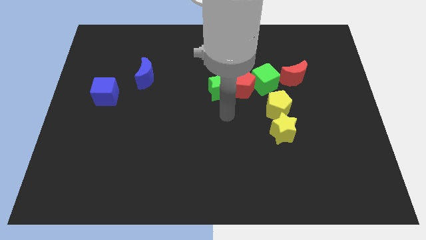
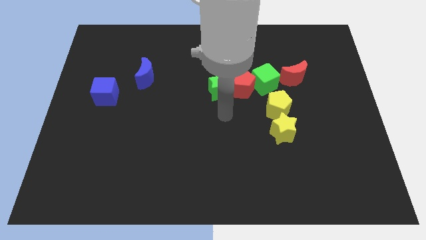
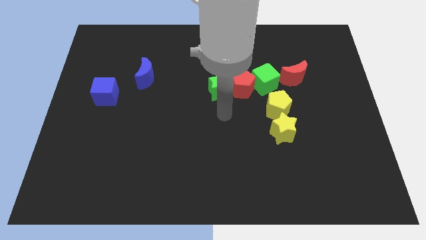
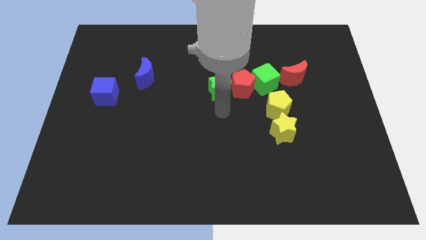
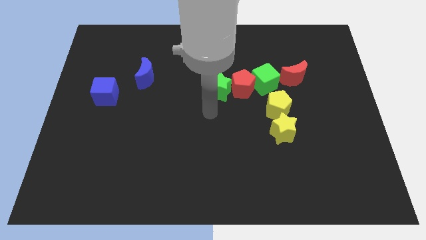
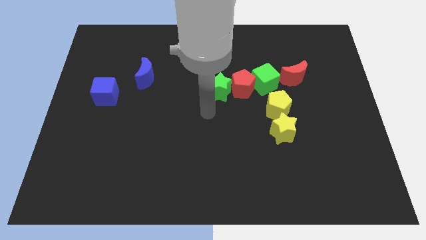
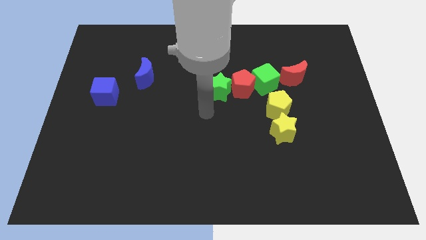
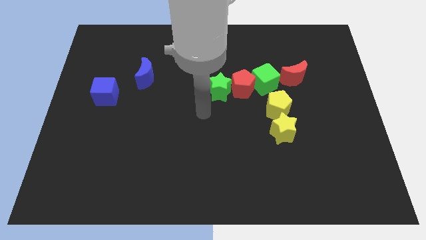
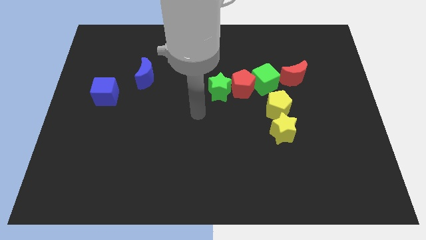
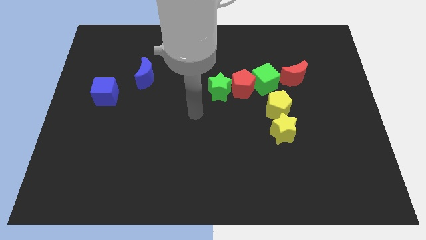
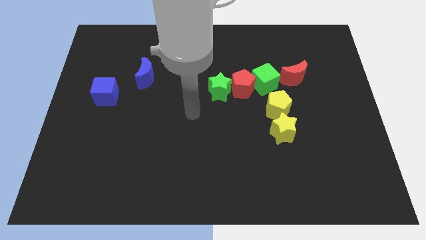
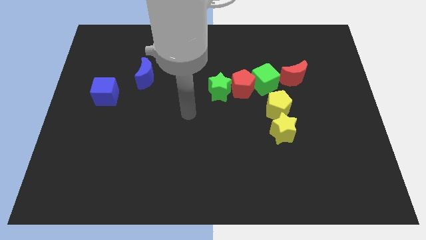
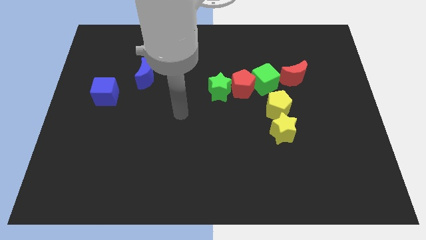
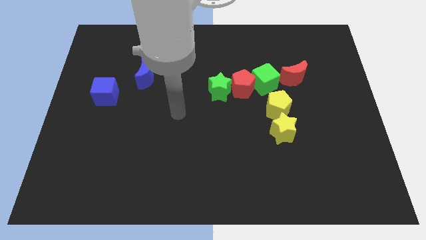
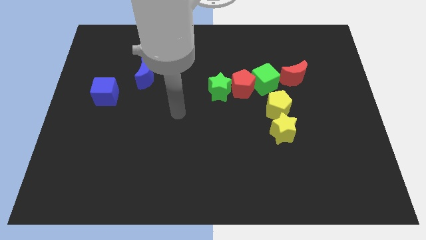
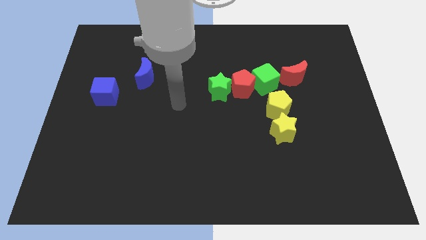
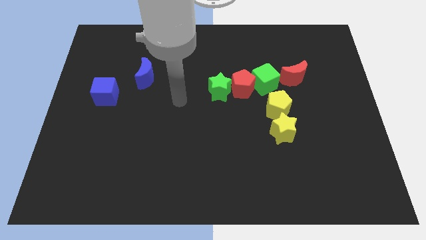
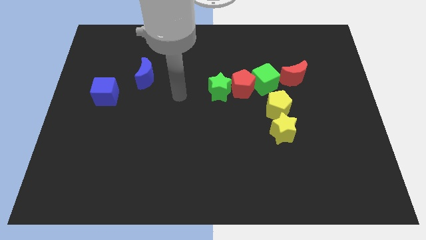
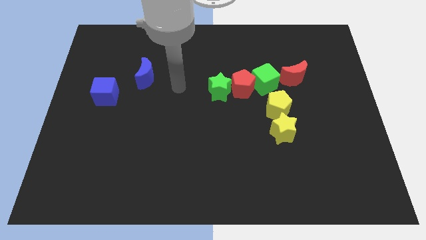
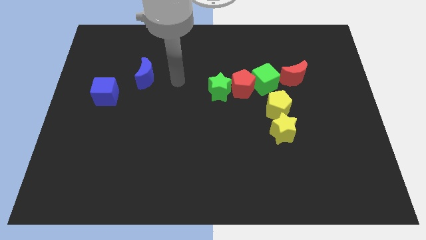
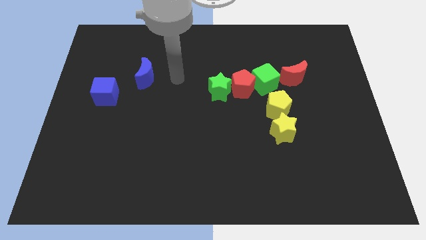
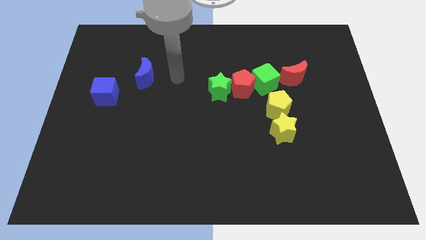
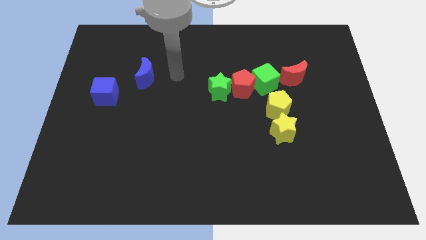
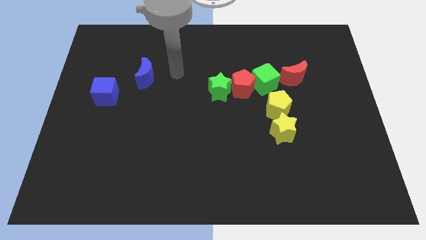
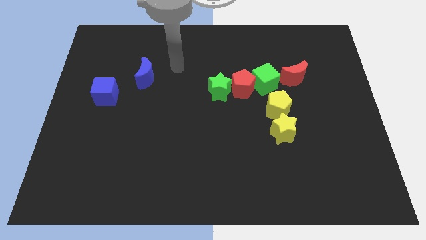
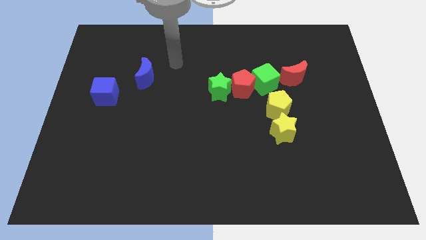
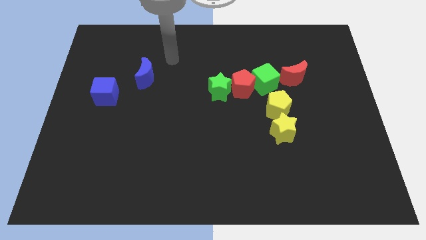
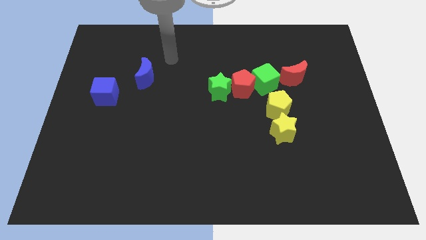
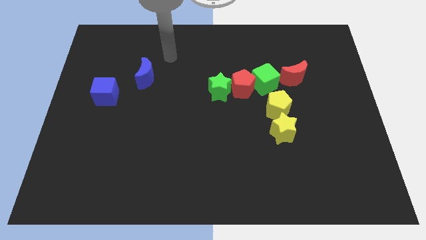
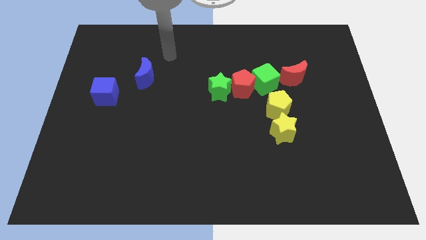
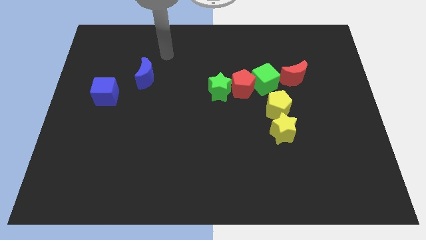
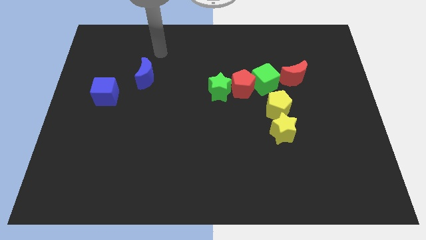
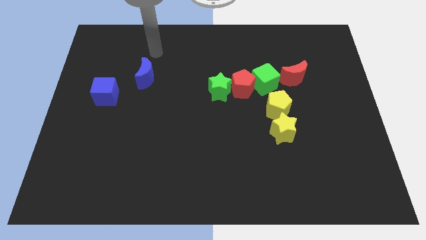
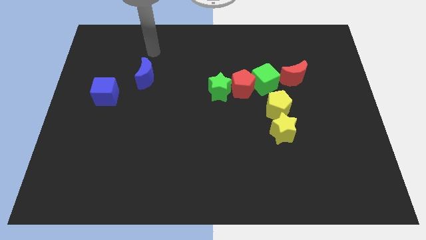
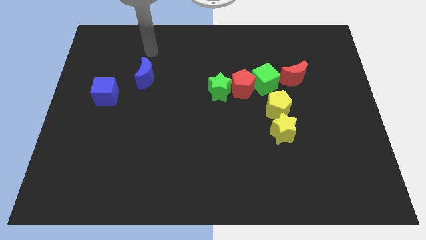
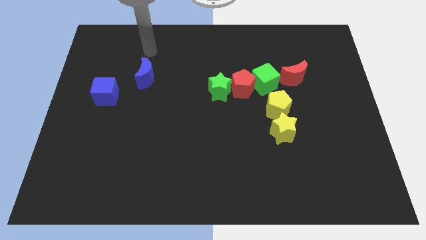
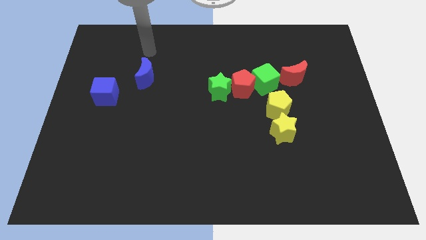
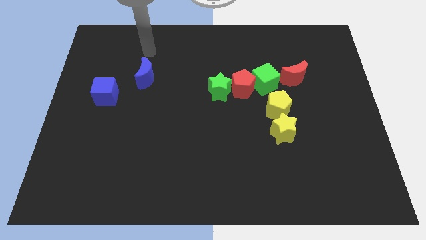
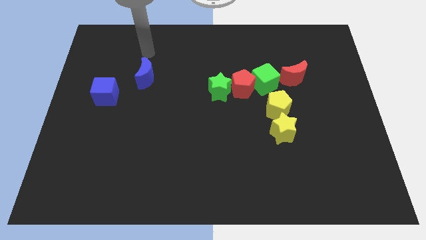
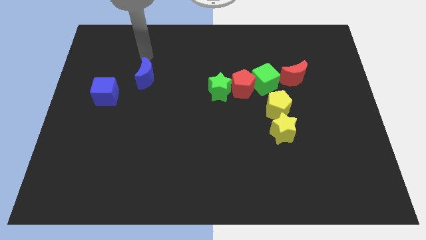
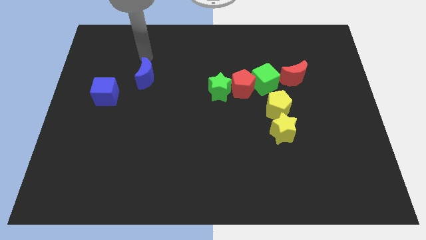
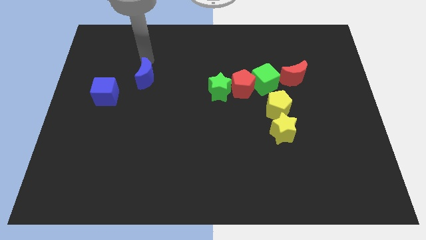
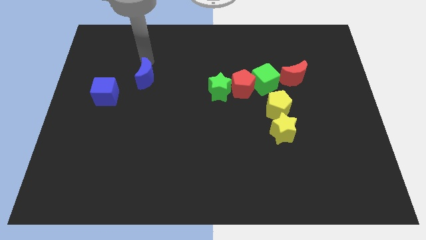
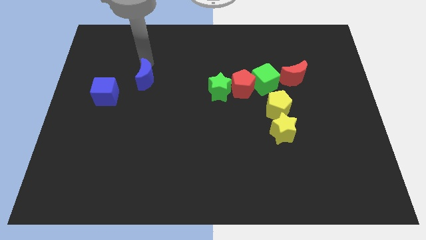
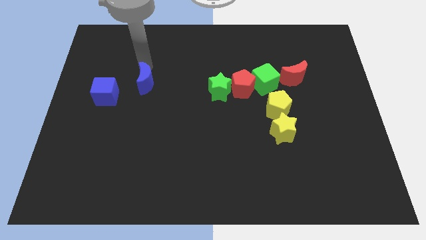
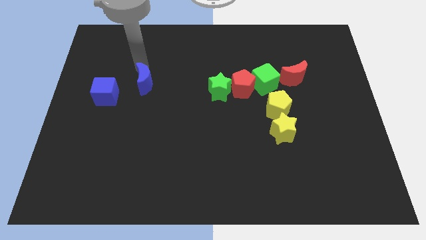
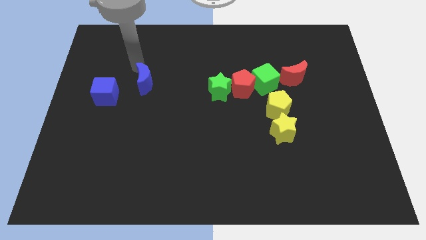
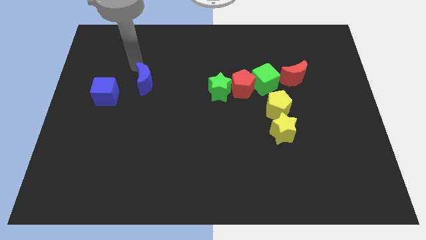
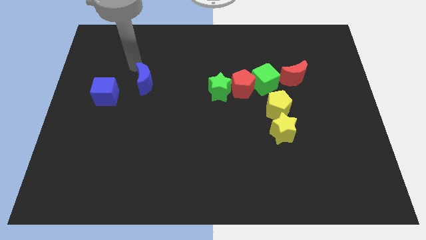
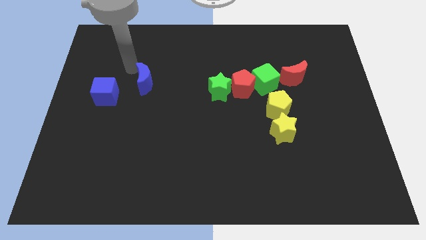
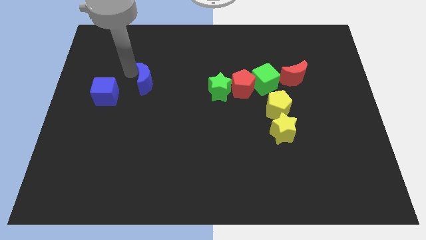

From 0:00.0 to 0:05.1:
place the blue crescent towards the top right side of the blue cube

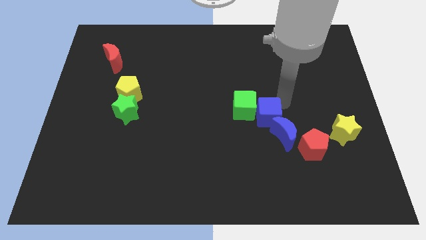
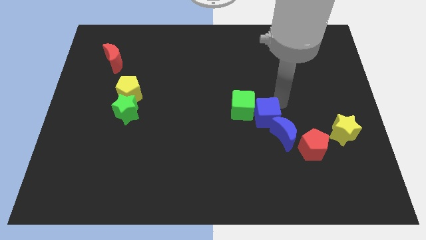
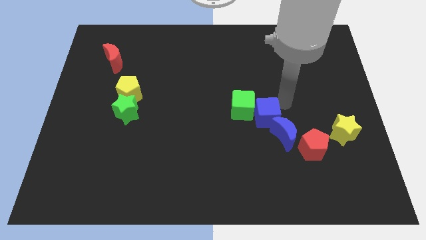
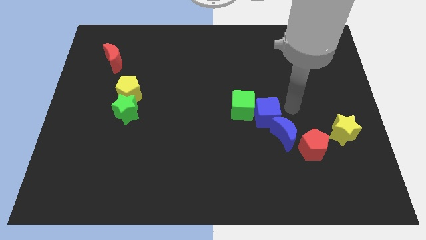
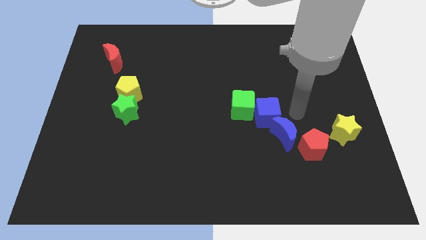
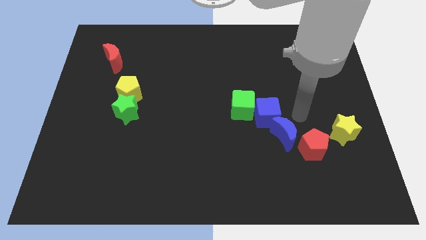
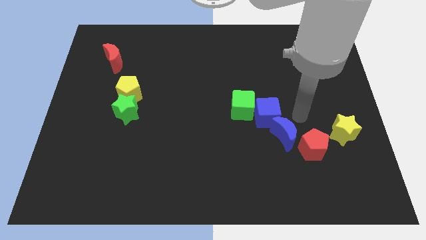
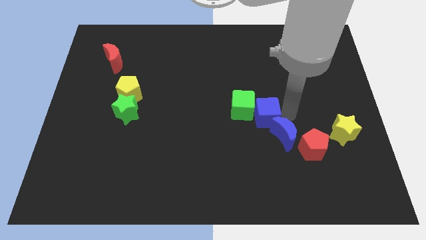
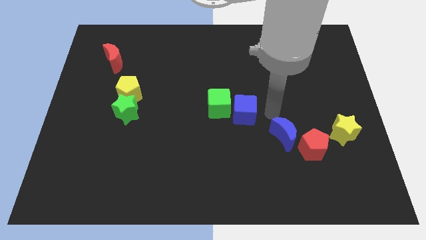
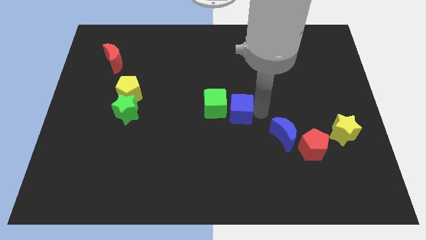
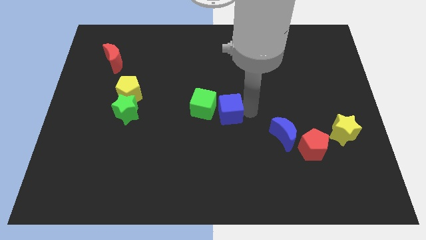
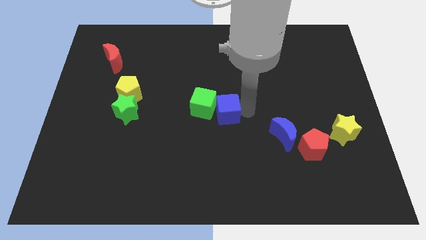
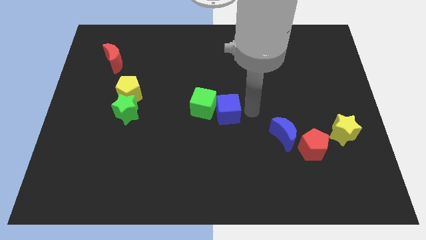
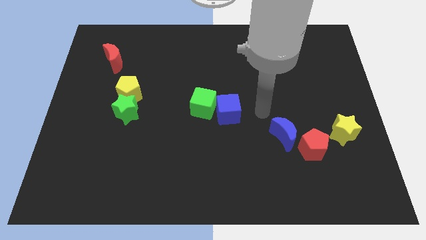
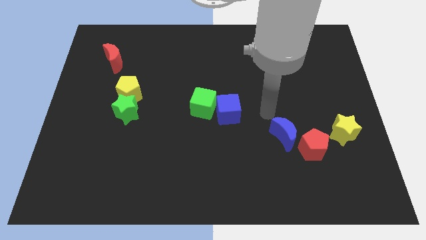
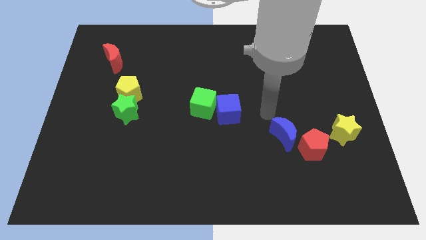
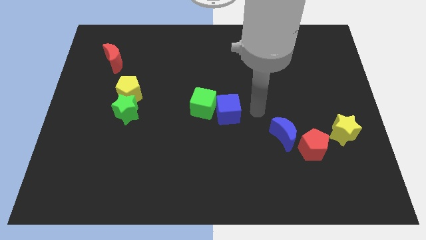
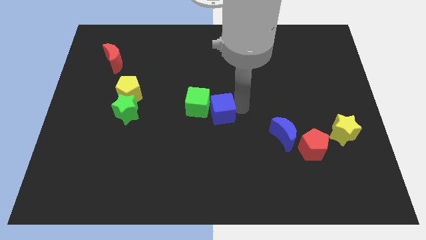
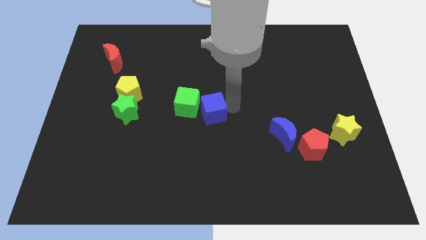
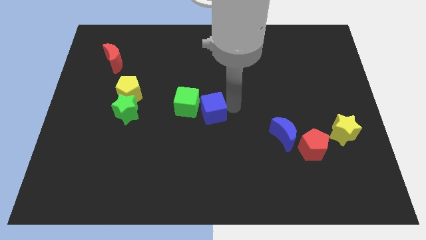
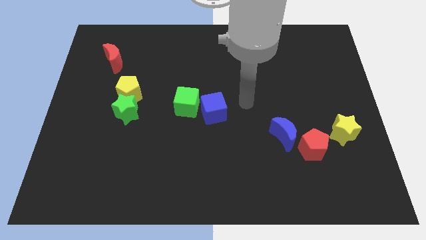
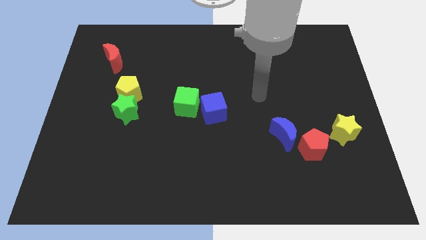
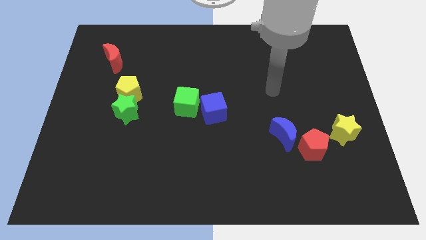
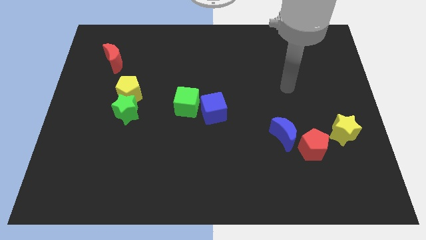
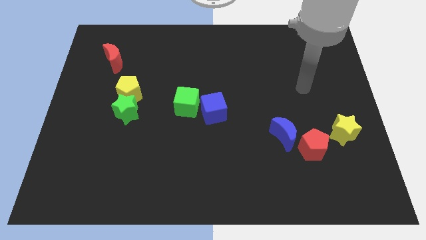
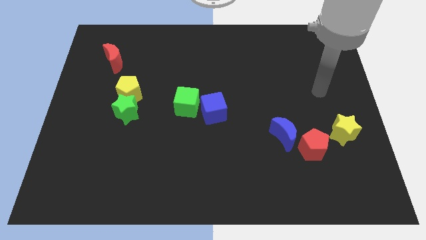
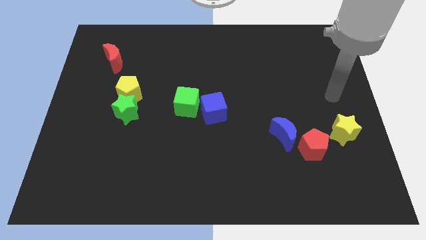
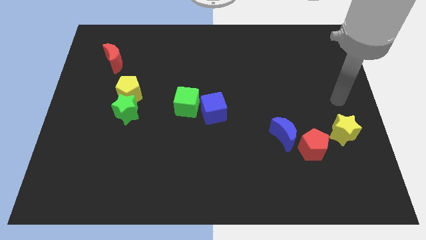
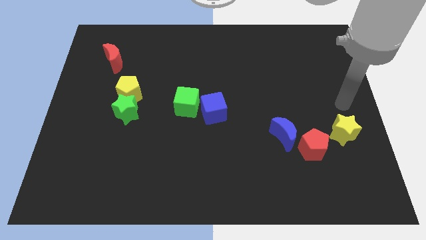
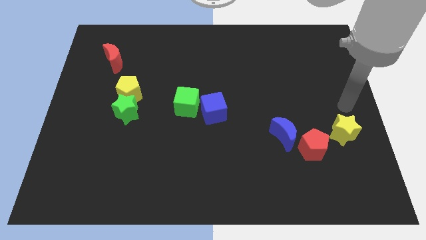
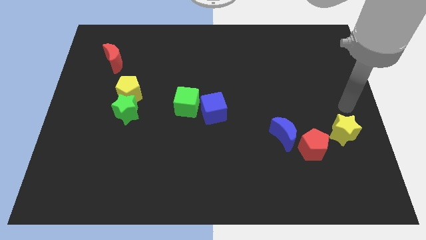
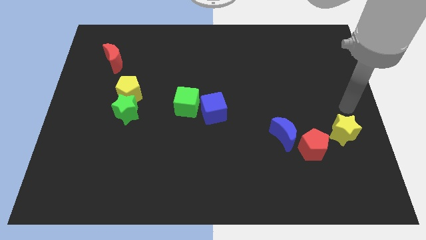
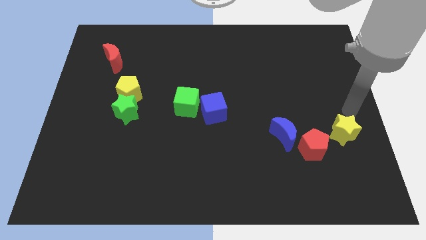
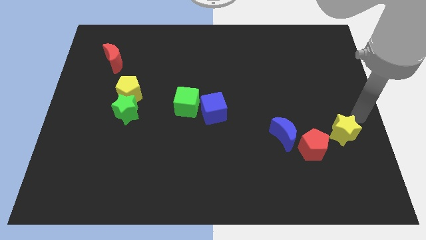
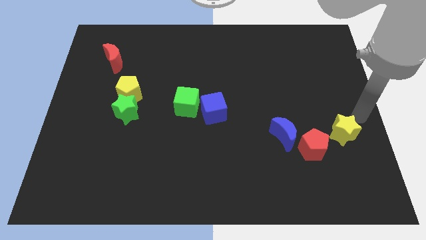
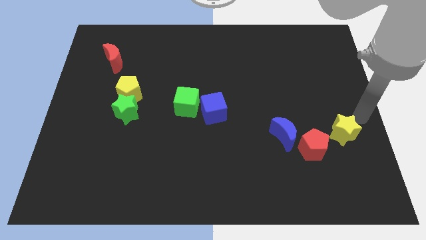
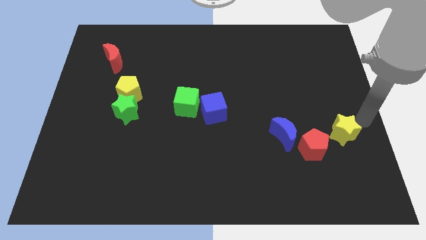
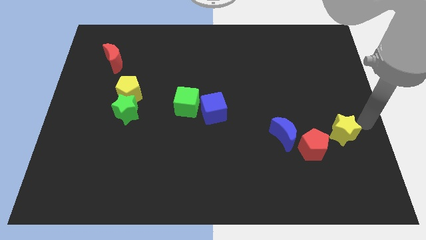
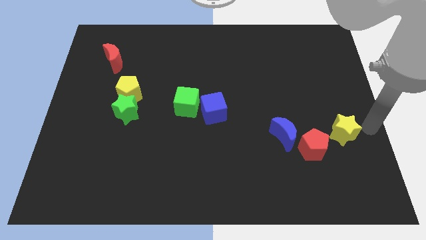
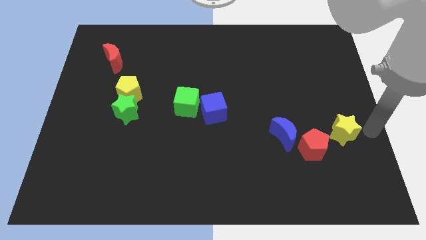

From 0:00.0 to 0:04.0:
move both green and blue cubes towards the center of the board
